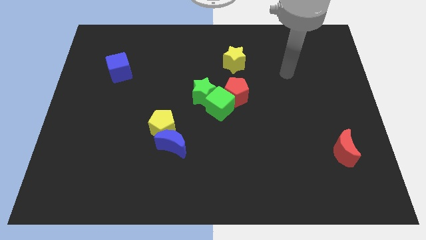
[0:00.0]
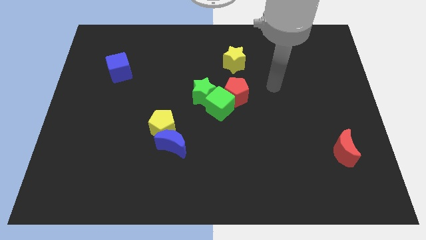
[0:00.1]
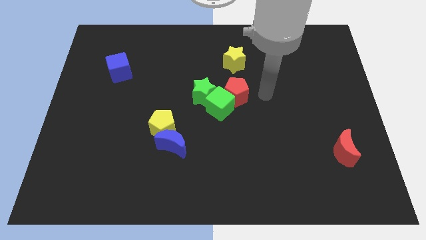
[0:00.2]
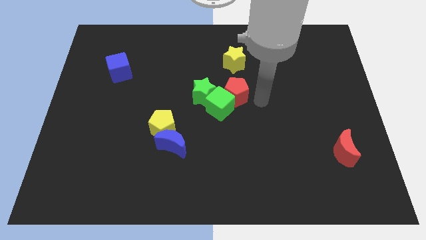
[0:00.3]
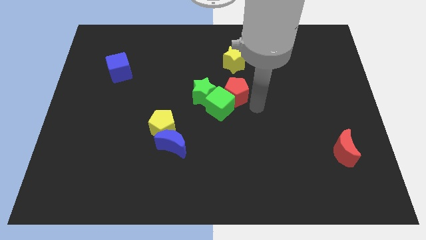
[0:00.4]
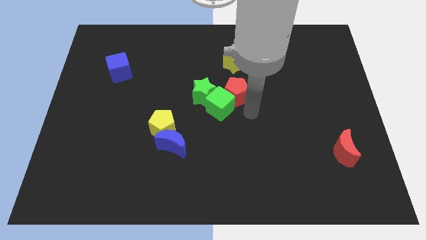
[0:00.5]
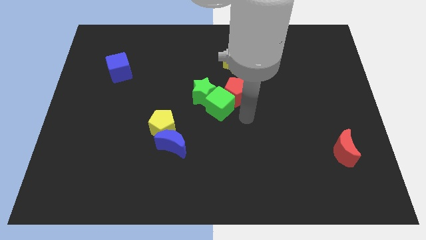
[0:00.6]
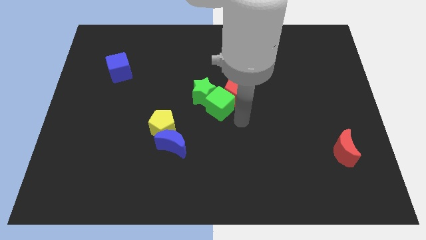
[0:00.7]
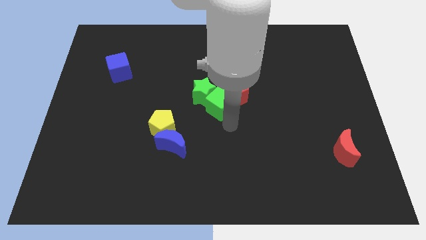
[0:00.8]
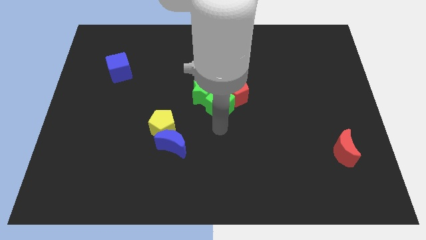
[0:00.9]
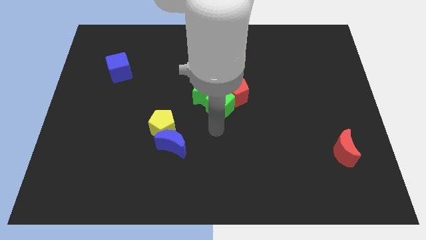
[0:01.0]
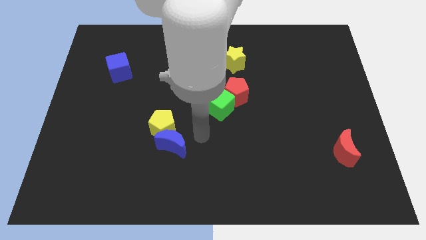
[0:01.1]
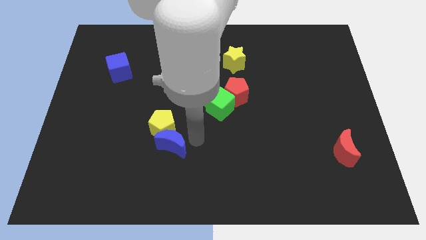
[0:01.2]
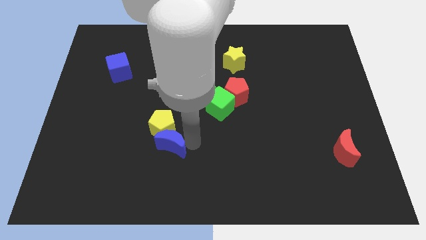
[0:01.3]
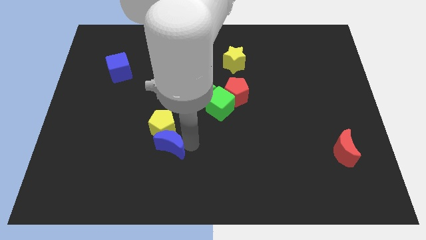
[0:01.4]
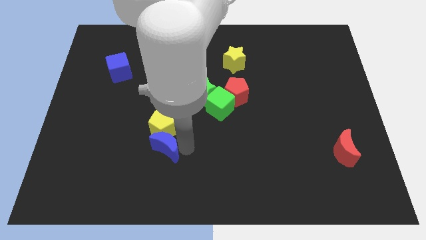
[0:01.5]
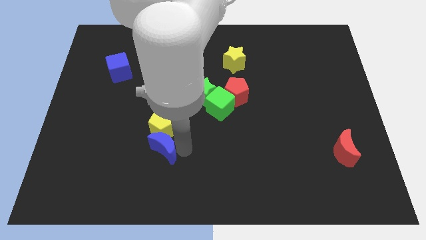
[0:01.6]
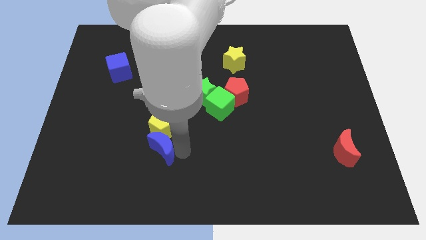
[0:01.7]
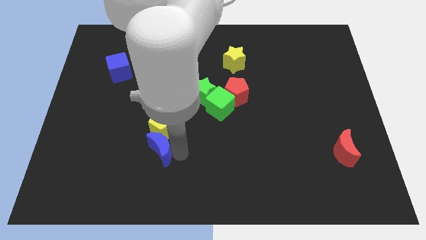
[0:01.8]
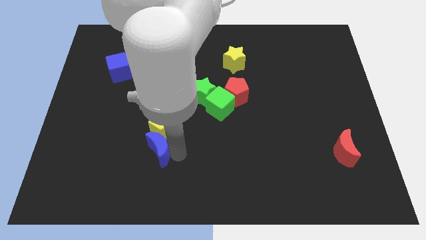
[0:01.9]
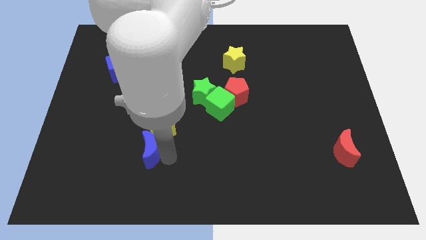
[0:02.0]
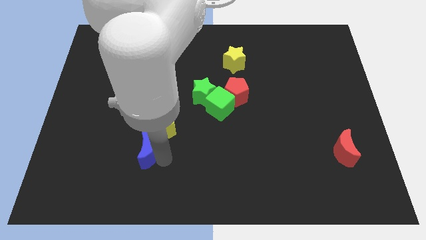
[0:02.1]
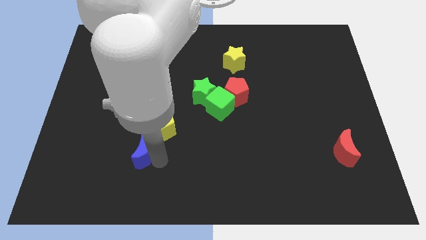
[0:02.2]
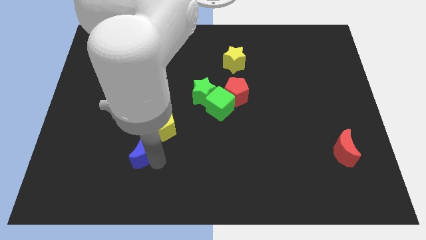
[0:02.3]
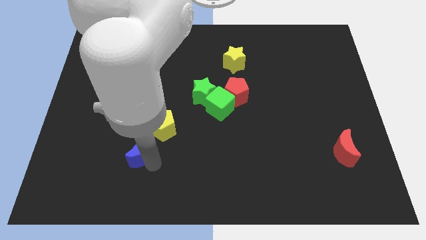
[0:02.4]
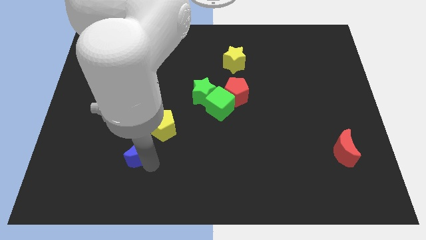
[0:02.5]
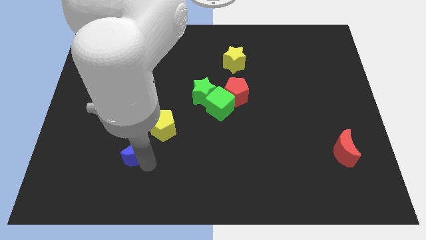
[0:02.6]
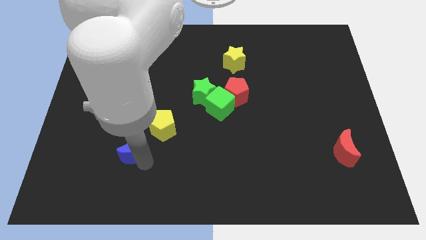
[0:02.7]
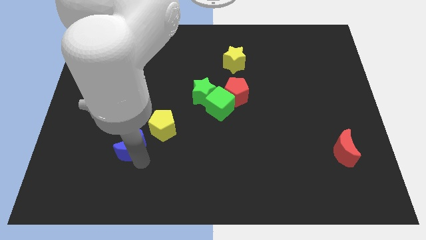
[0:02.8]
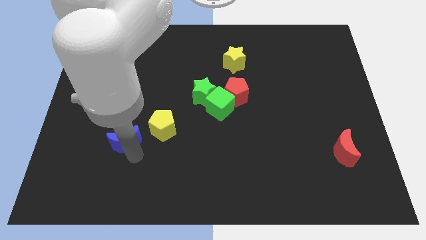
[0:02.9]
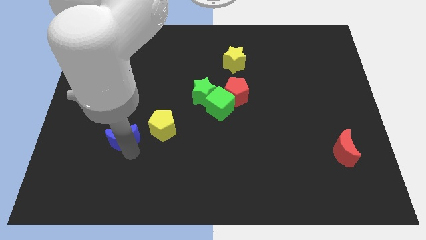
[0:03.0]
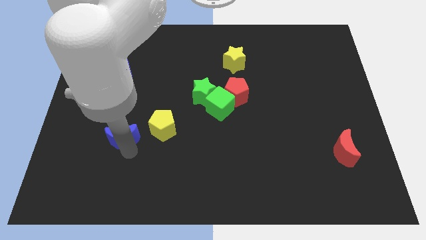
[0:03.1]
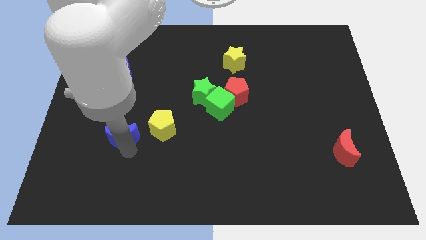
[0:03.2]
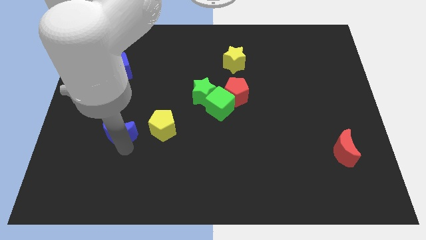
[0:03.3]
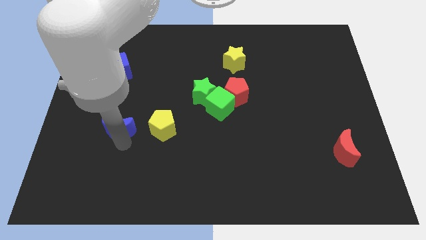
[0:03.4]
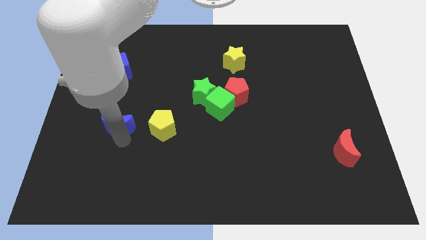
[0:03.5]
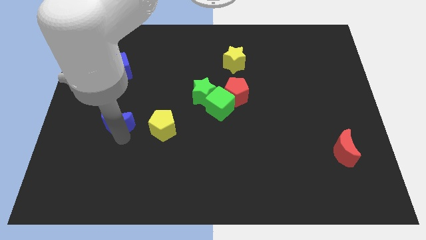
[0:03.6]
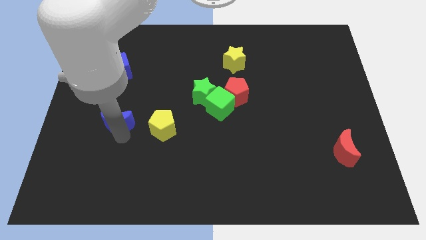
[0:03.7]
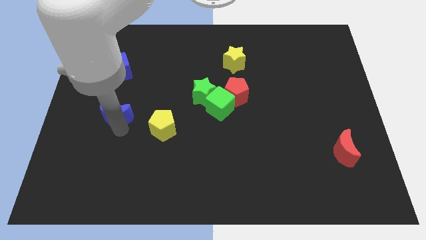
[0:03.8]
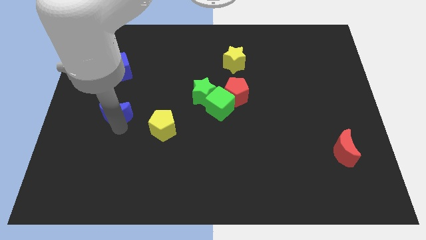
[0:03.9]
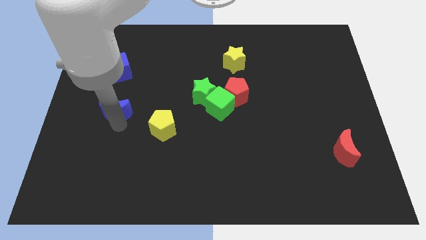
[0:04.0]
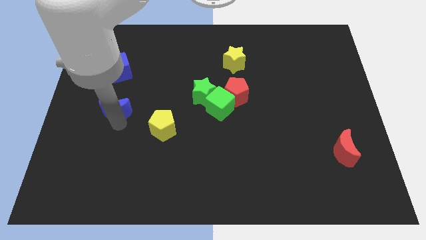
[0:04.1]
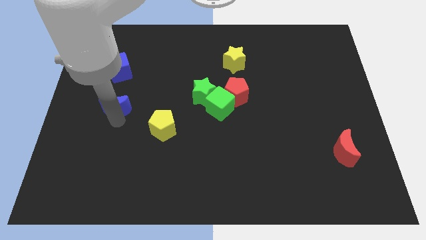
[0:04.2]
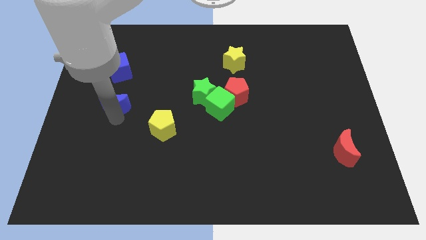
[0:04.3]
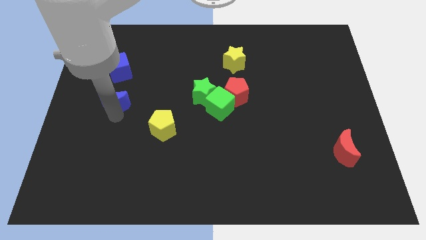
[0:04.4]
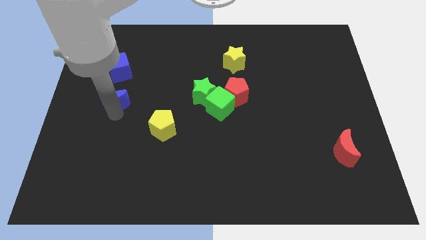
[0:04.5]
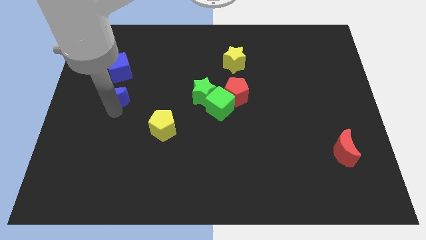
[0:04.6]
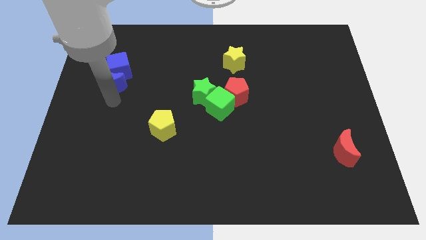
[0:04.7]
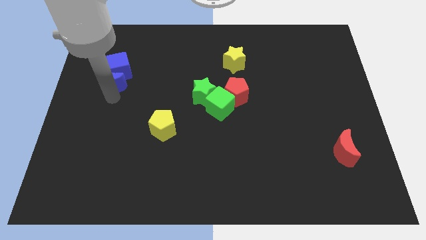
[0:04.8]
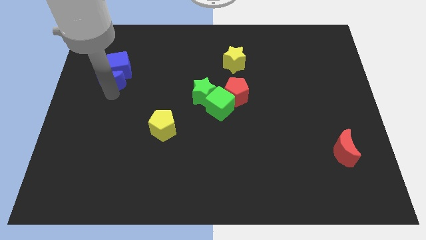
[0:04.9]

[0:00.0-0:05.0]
put the blue moon next to the blue cube

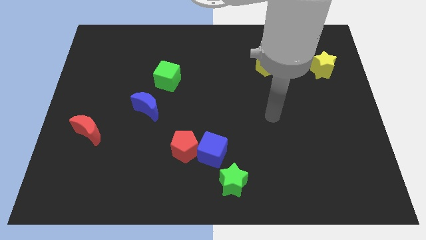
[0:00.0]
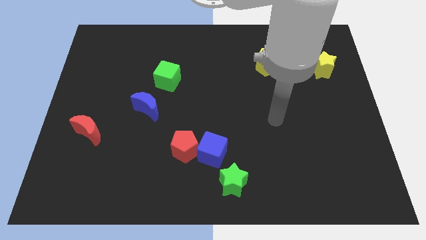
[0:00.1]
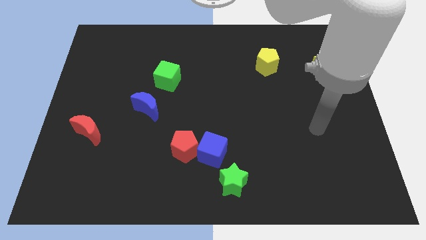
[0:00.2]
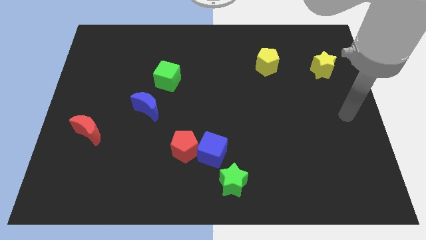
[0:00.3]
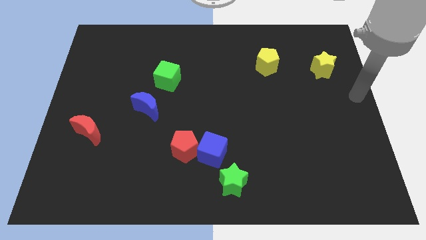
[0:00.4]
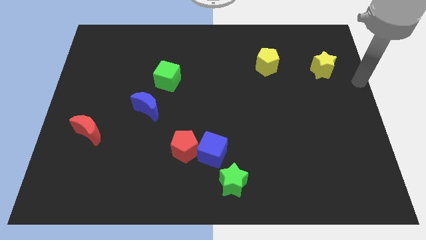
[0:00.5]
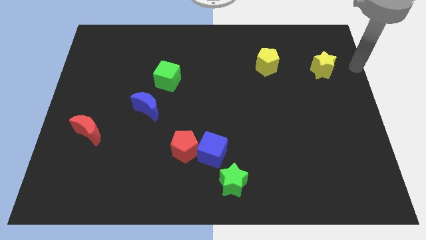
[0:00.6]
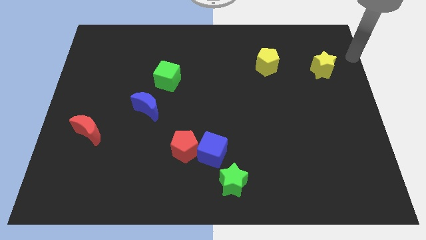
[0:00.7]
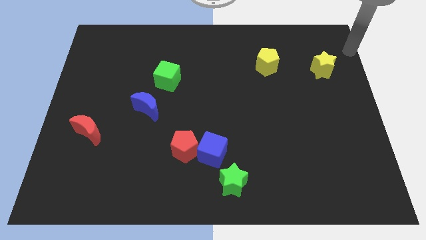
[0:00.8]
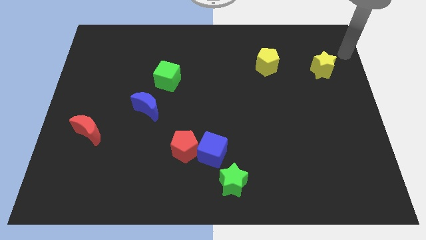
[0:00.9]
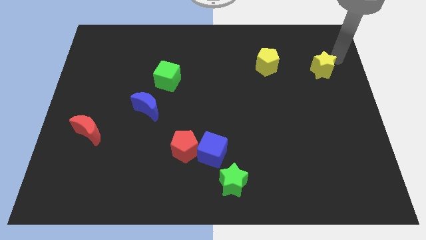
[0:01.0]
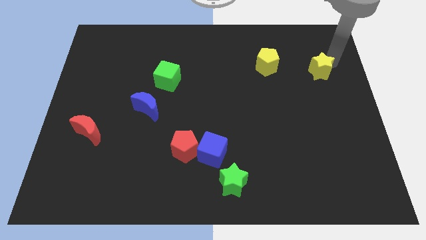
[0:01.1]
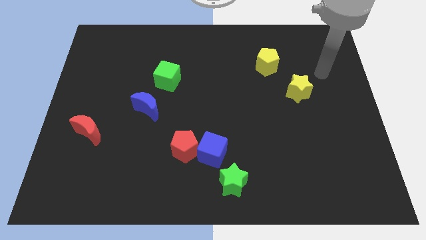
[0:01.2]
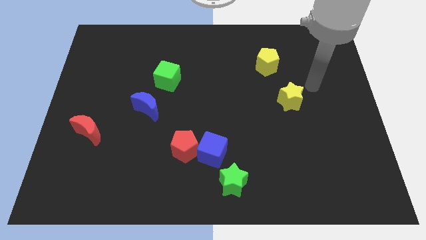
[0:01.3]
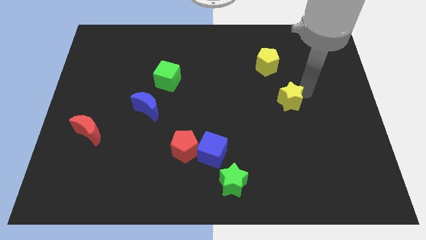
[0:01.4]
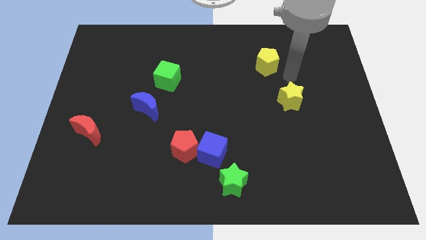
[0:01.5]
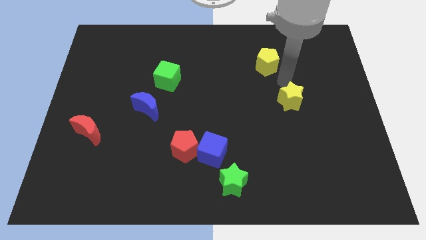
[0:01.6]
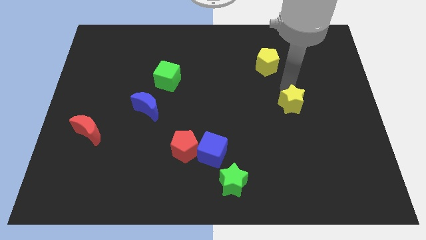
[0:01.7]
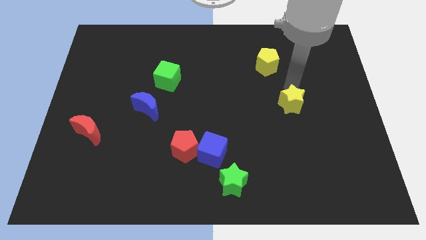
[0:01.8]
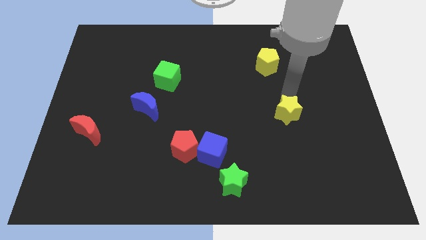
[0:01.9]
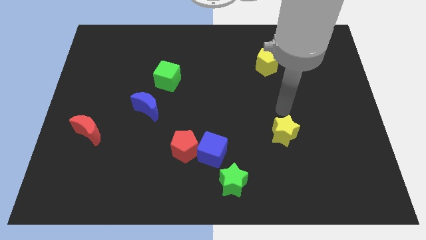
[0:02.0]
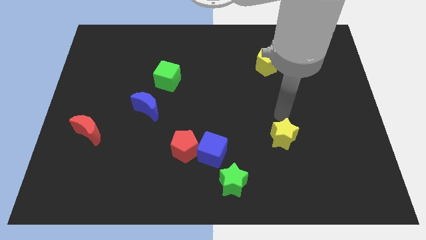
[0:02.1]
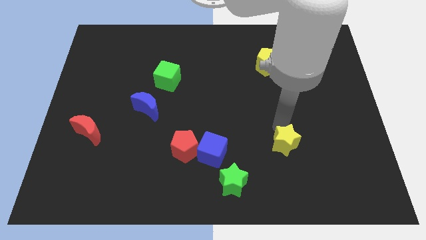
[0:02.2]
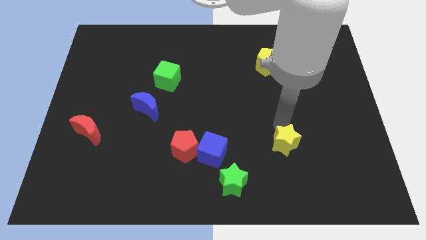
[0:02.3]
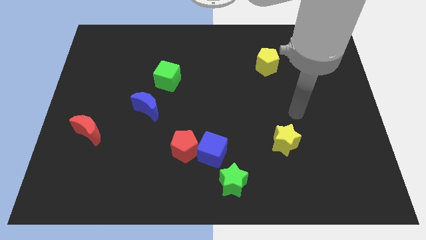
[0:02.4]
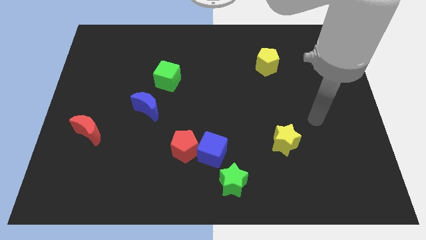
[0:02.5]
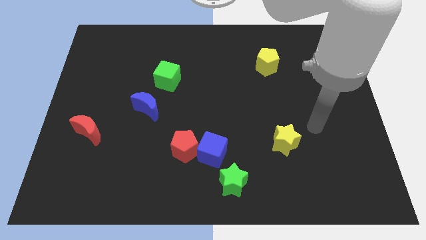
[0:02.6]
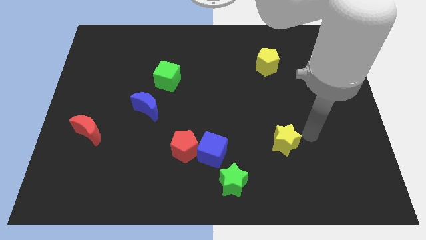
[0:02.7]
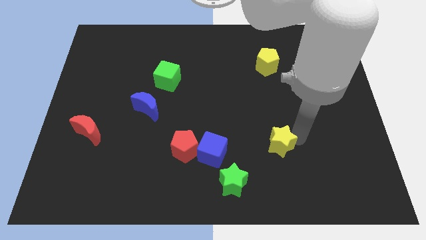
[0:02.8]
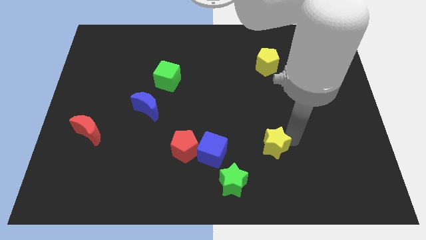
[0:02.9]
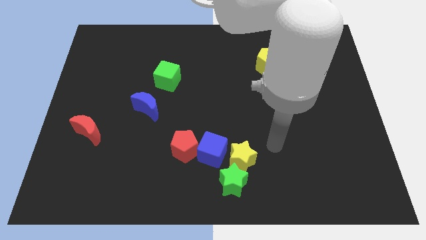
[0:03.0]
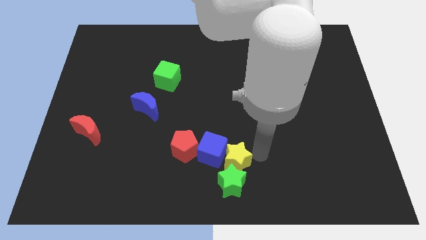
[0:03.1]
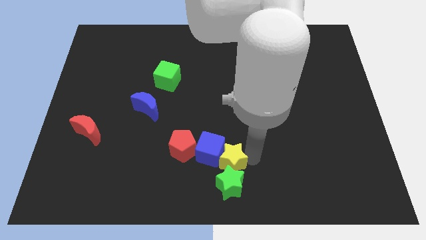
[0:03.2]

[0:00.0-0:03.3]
move the yellow star next to the green star
